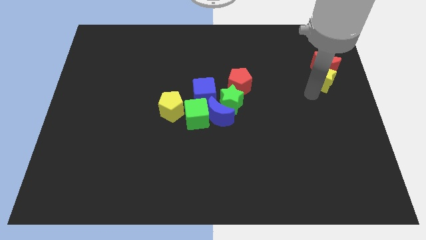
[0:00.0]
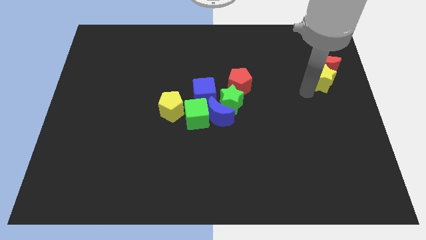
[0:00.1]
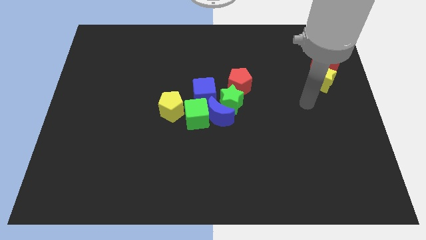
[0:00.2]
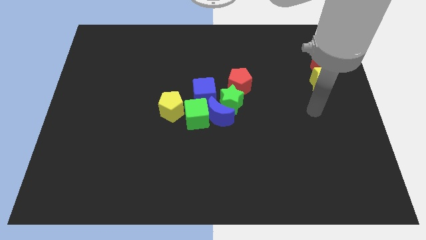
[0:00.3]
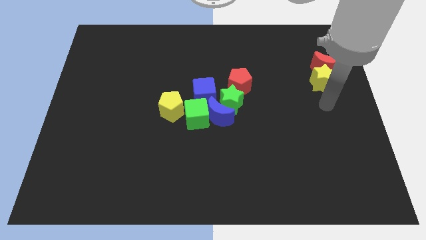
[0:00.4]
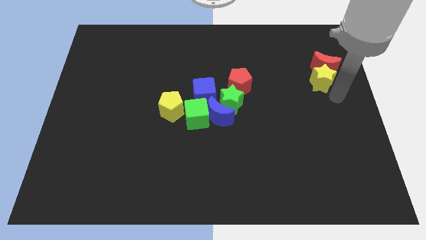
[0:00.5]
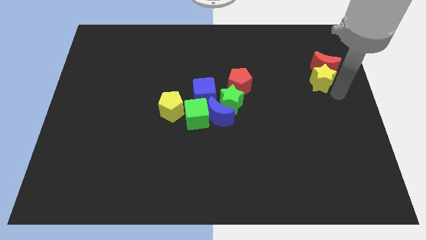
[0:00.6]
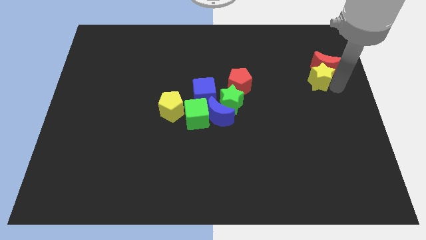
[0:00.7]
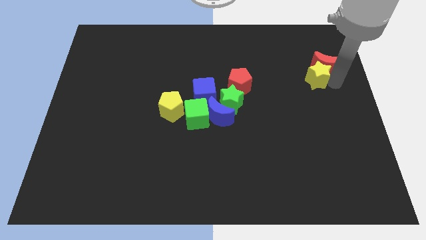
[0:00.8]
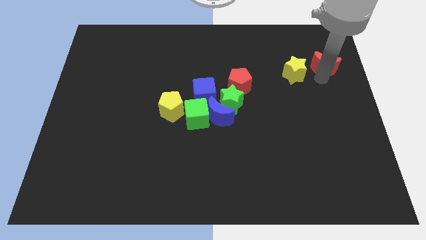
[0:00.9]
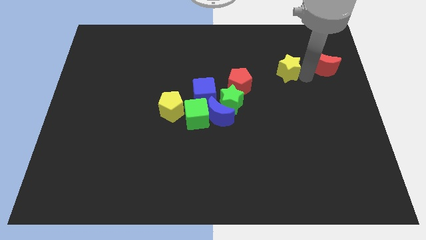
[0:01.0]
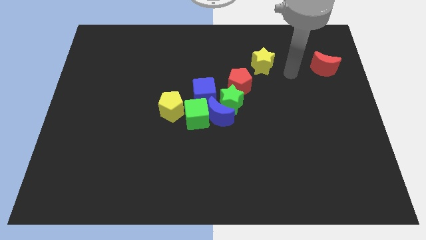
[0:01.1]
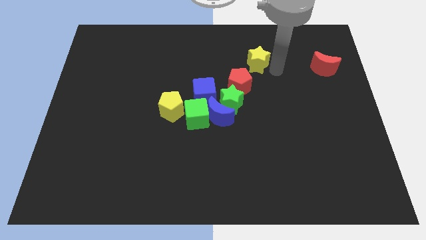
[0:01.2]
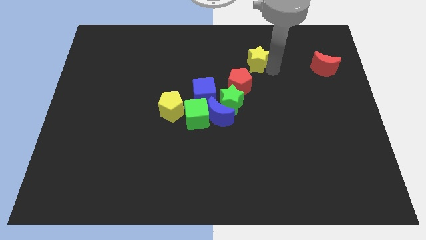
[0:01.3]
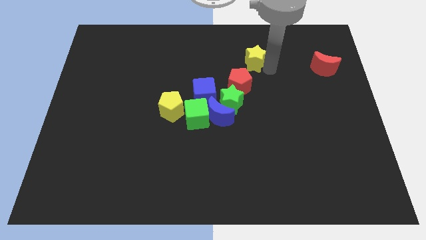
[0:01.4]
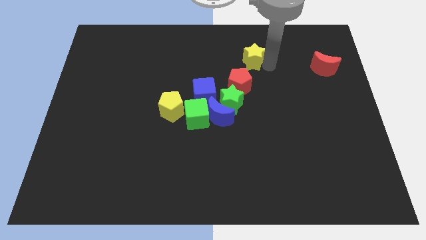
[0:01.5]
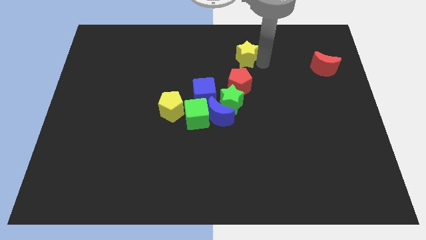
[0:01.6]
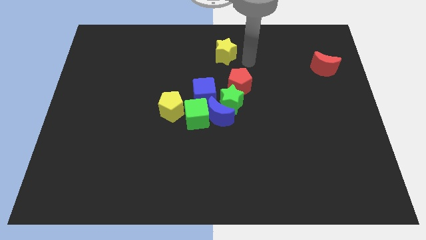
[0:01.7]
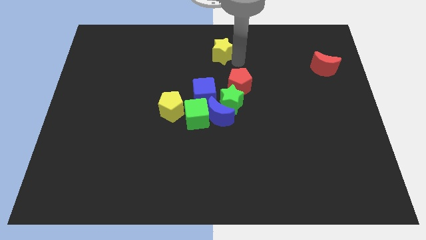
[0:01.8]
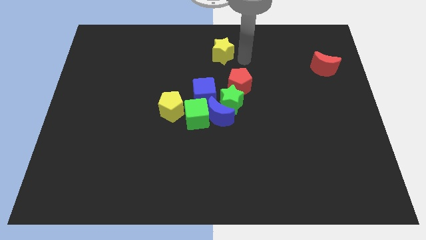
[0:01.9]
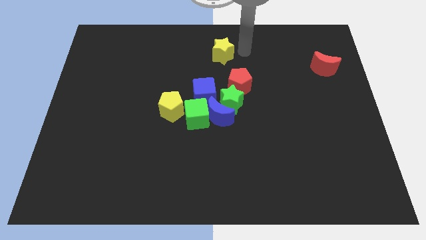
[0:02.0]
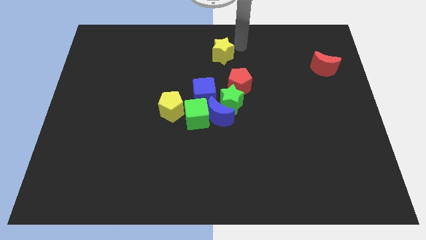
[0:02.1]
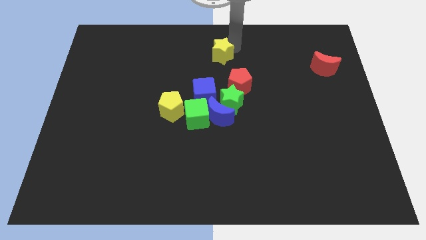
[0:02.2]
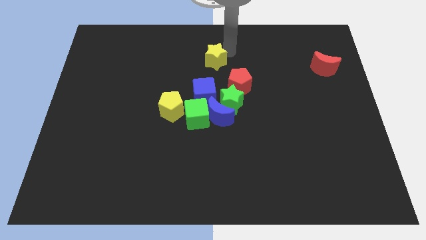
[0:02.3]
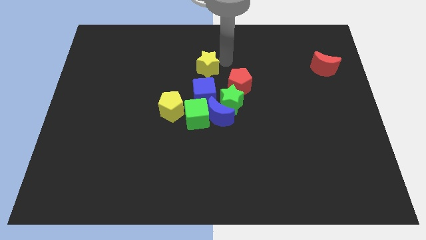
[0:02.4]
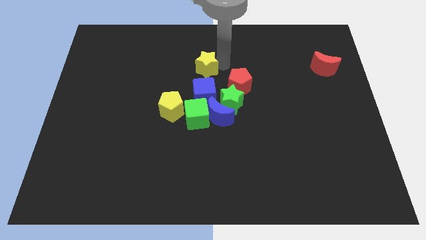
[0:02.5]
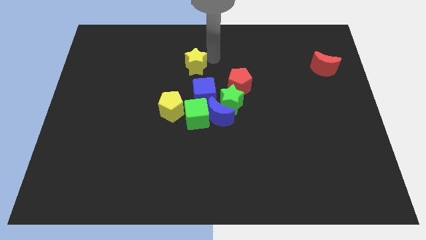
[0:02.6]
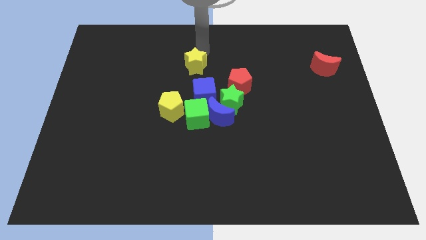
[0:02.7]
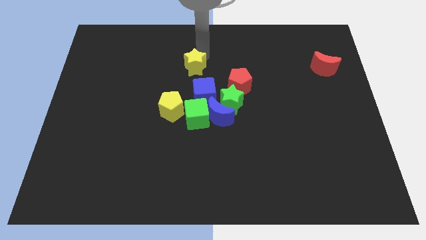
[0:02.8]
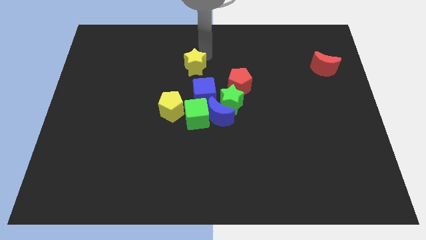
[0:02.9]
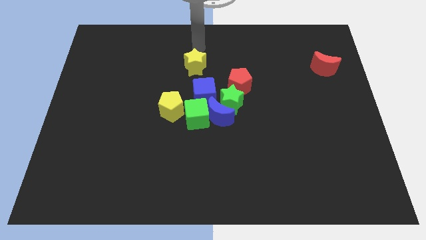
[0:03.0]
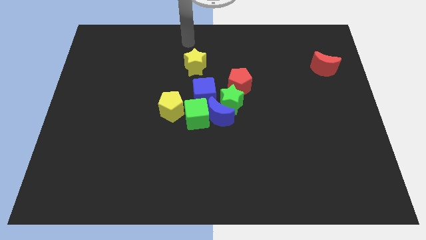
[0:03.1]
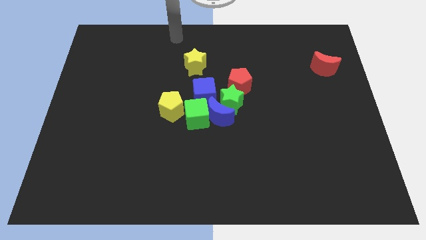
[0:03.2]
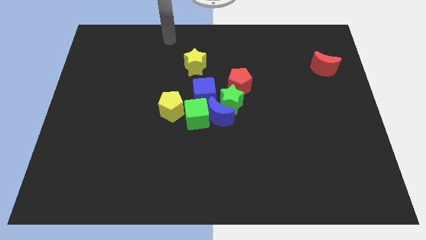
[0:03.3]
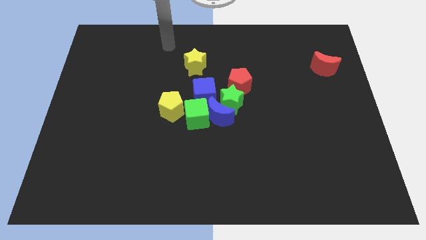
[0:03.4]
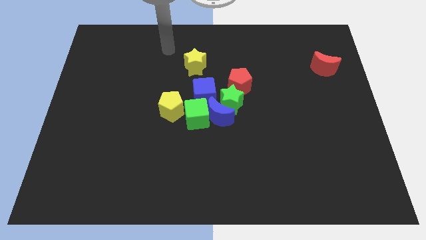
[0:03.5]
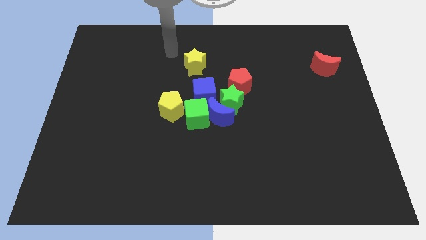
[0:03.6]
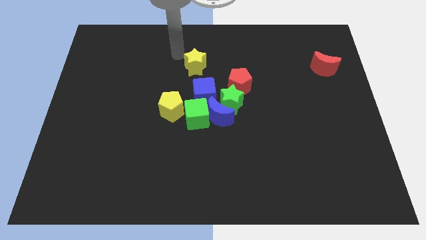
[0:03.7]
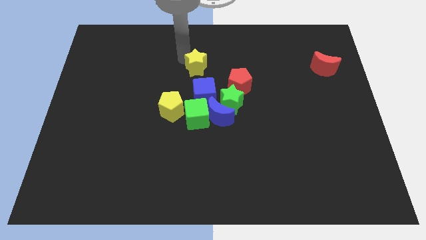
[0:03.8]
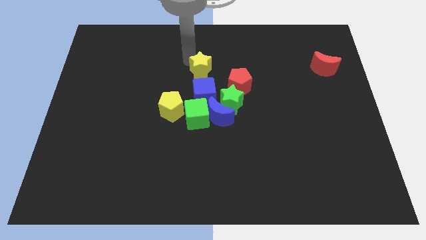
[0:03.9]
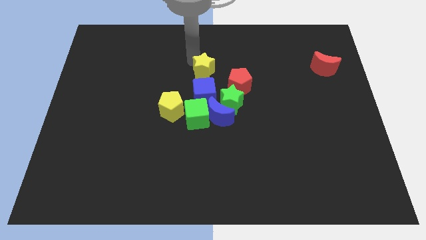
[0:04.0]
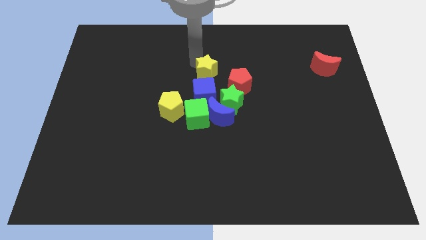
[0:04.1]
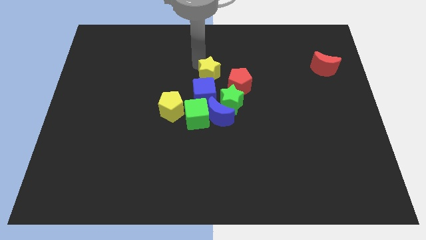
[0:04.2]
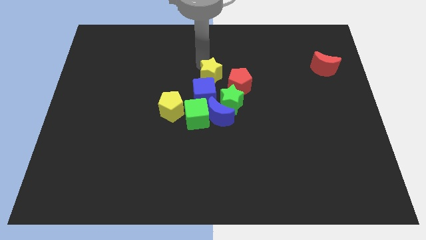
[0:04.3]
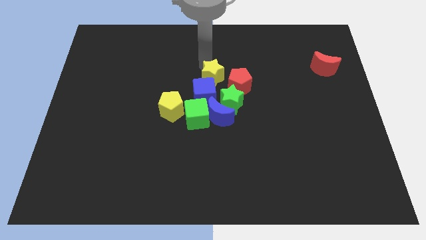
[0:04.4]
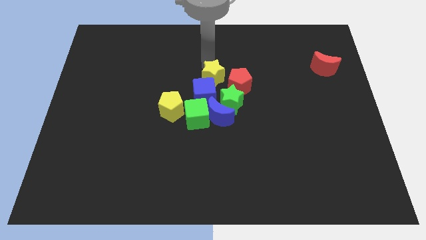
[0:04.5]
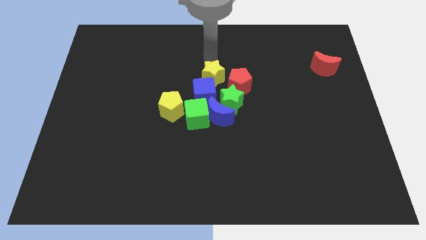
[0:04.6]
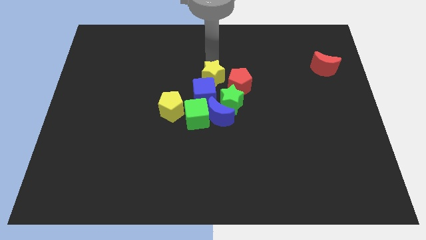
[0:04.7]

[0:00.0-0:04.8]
place yellow star on top of blue cube

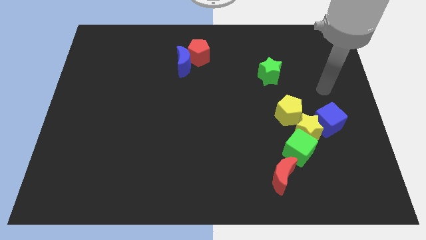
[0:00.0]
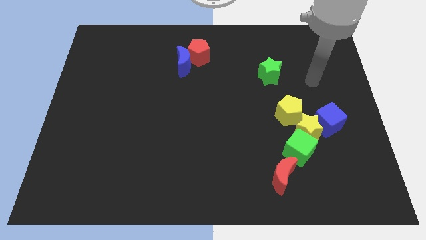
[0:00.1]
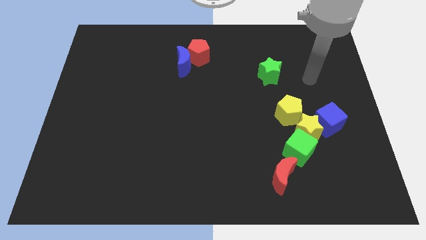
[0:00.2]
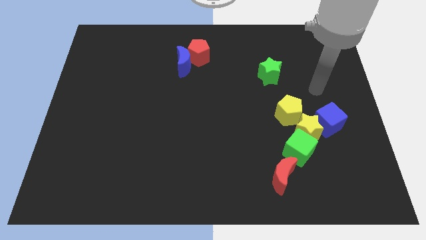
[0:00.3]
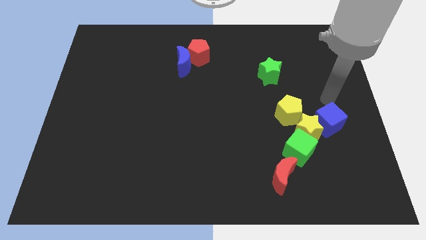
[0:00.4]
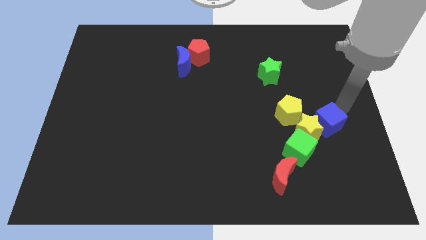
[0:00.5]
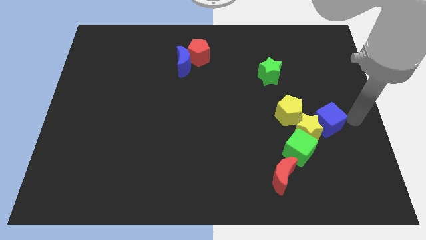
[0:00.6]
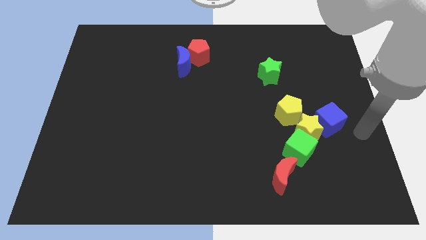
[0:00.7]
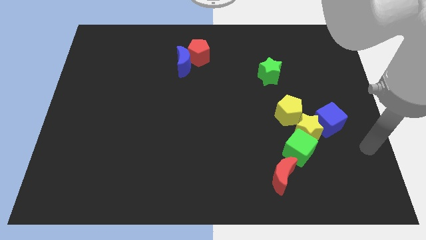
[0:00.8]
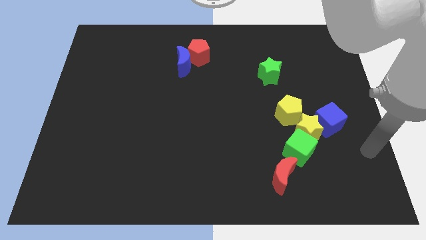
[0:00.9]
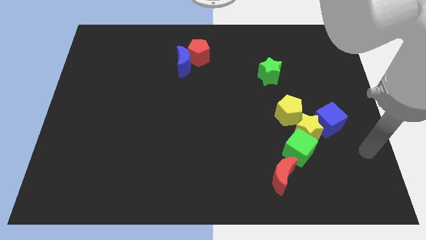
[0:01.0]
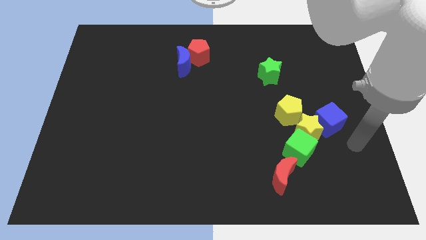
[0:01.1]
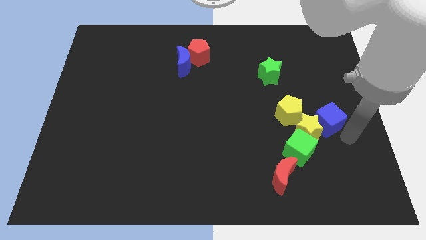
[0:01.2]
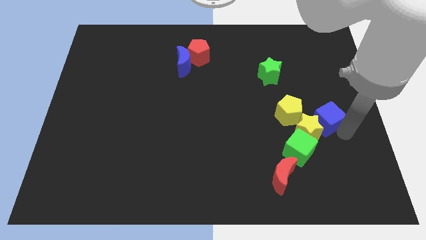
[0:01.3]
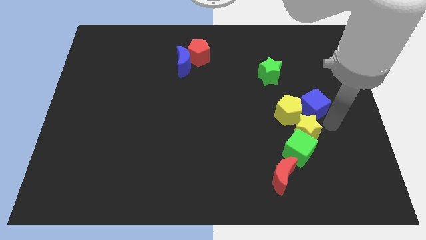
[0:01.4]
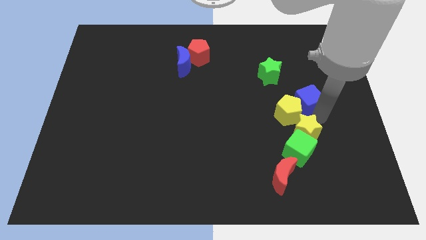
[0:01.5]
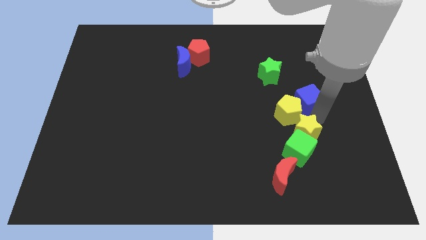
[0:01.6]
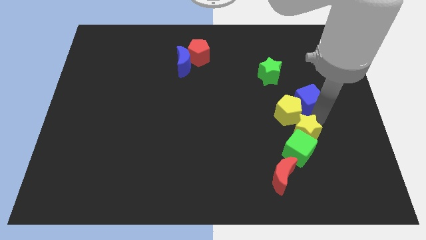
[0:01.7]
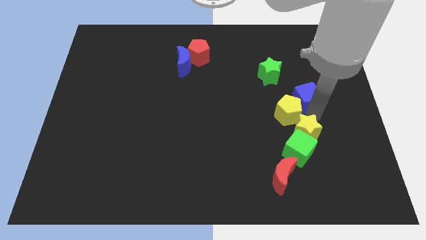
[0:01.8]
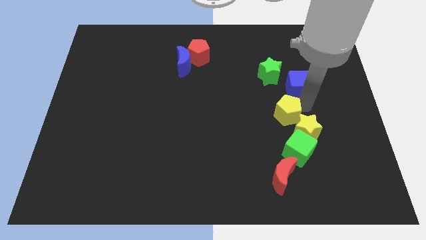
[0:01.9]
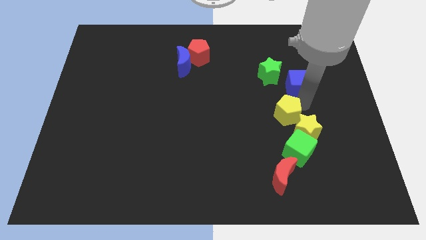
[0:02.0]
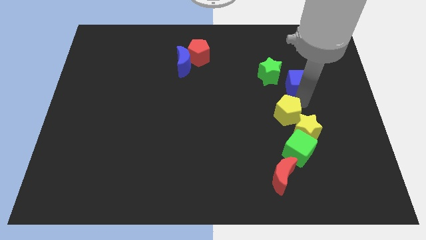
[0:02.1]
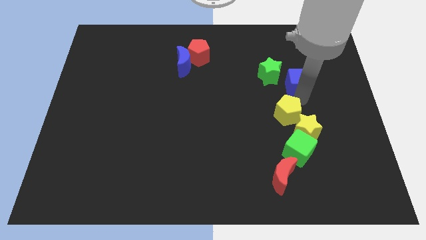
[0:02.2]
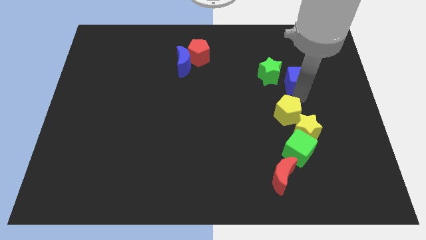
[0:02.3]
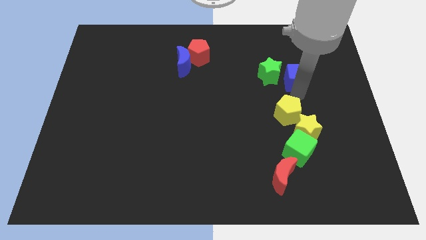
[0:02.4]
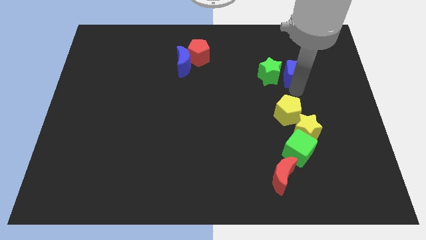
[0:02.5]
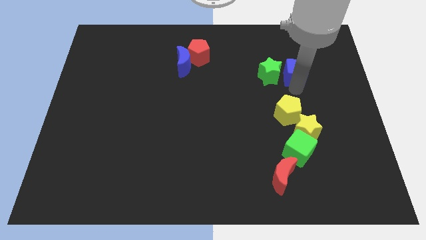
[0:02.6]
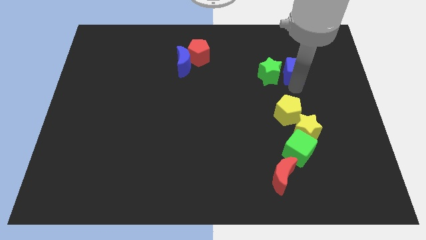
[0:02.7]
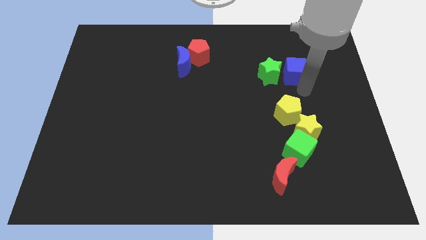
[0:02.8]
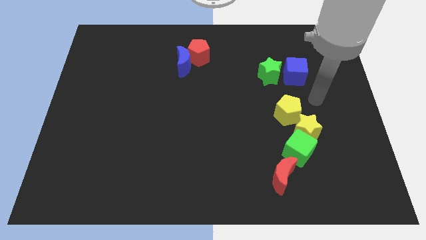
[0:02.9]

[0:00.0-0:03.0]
push the blue cube to the right of the green star

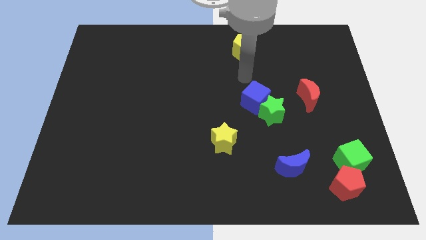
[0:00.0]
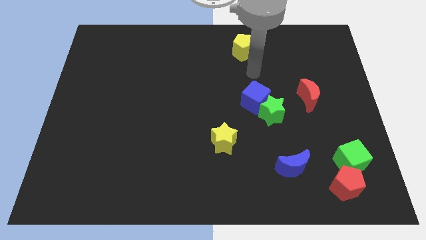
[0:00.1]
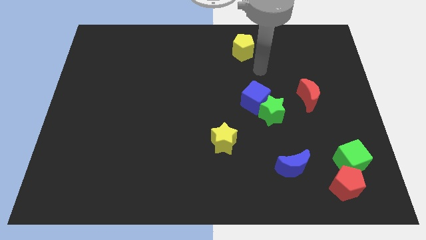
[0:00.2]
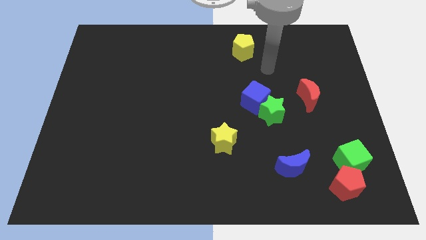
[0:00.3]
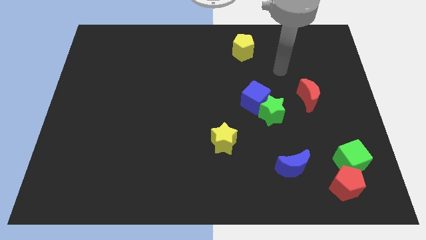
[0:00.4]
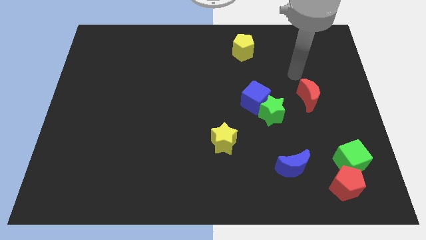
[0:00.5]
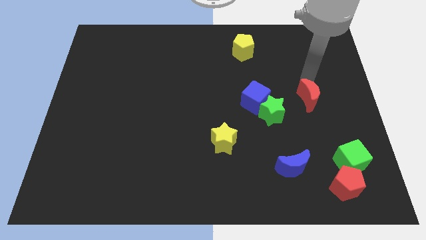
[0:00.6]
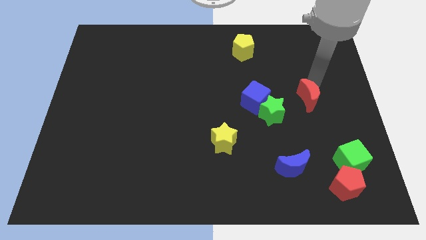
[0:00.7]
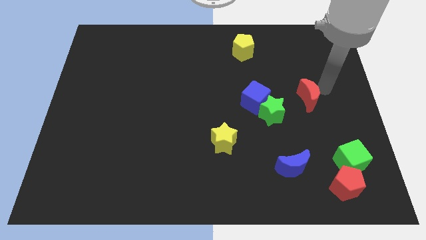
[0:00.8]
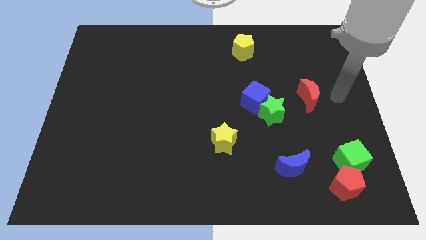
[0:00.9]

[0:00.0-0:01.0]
point your arm at the right of the red crescent

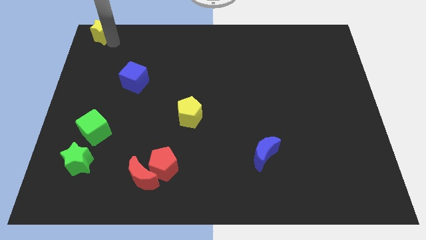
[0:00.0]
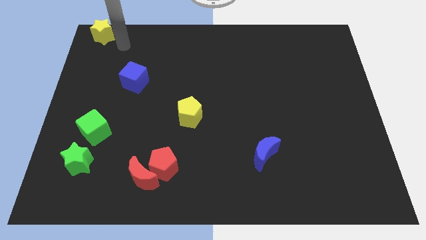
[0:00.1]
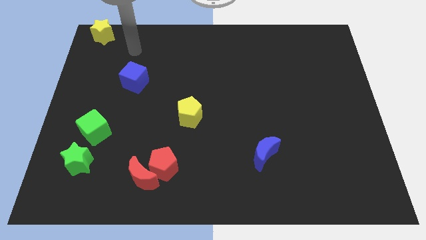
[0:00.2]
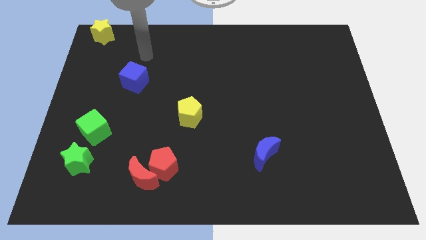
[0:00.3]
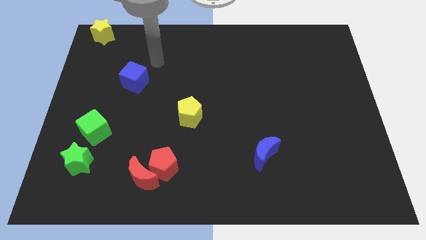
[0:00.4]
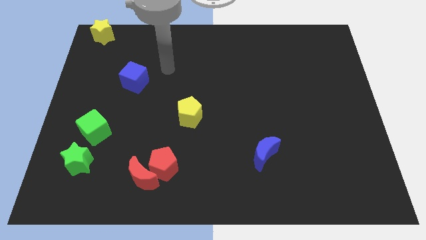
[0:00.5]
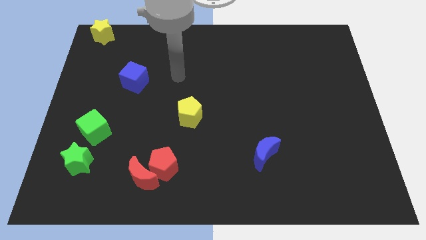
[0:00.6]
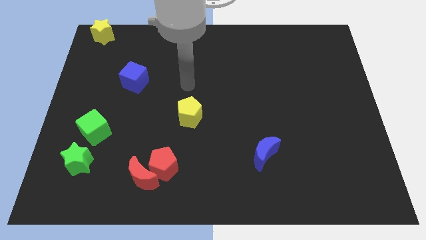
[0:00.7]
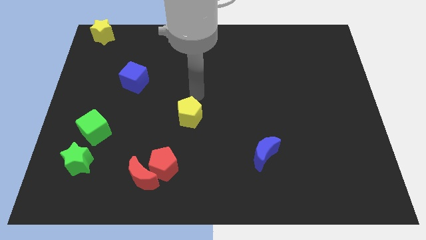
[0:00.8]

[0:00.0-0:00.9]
move the arm away from the yellow star
